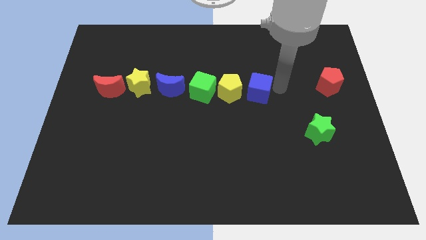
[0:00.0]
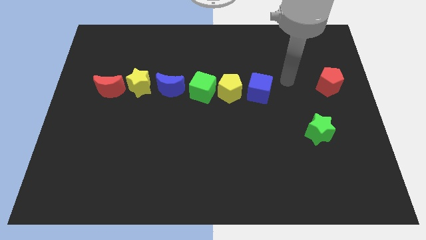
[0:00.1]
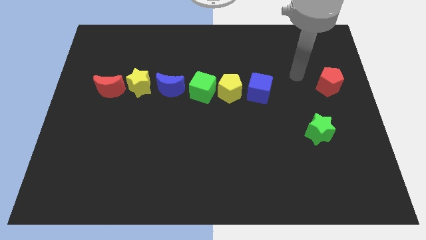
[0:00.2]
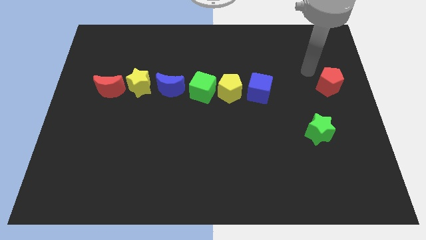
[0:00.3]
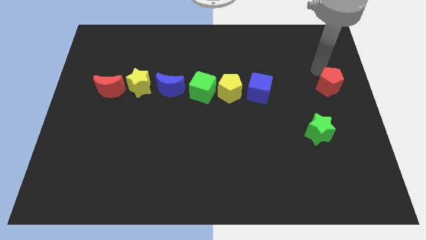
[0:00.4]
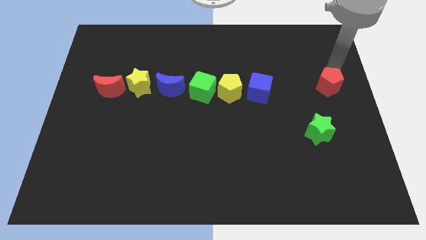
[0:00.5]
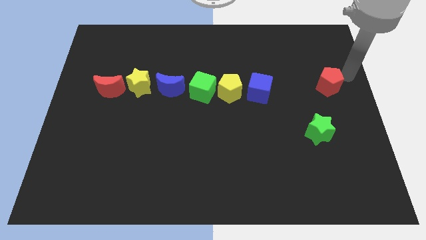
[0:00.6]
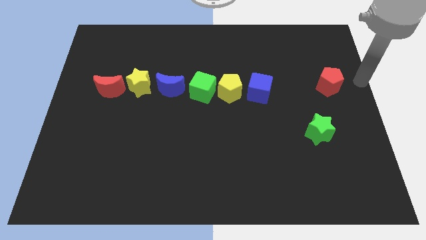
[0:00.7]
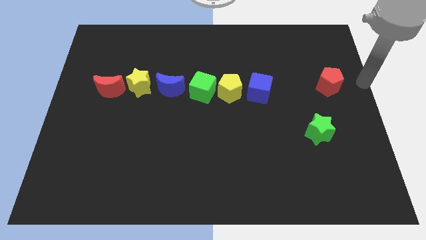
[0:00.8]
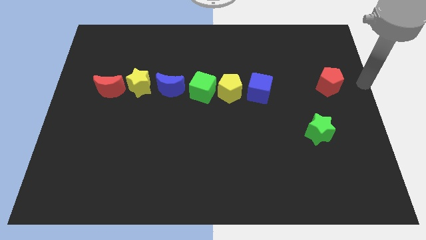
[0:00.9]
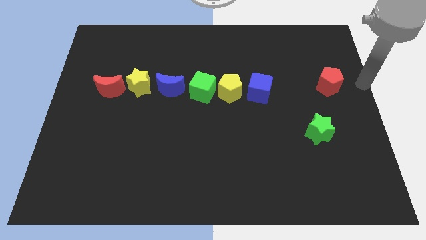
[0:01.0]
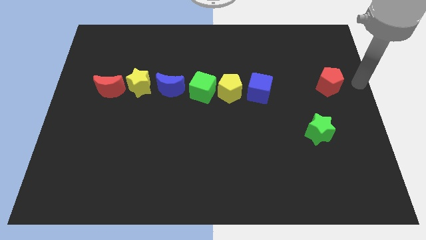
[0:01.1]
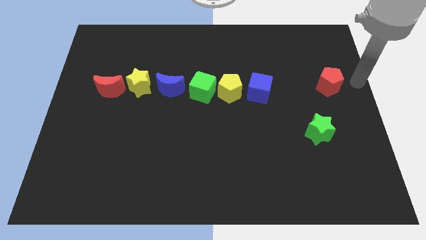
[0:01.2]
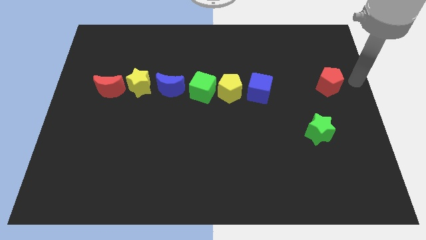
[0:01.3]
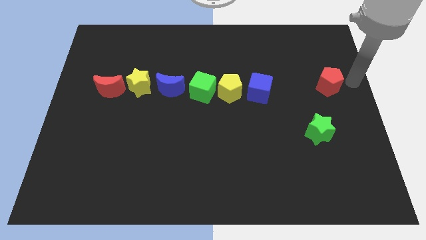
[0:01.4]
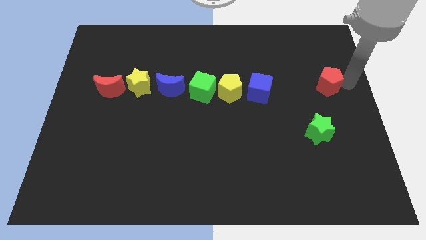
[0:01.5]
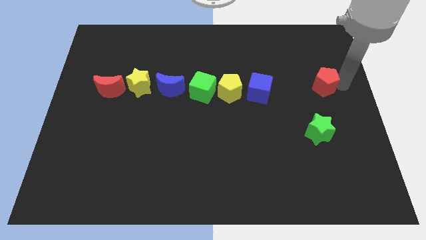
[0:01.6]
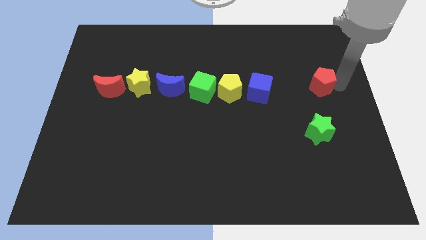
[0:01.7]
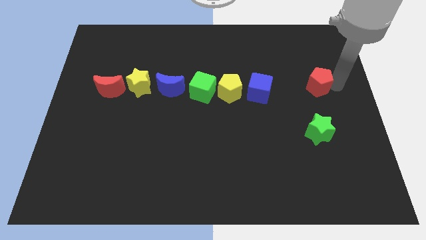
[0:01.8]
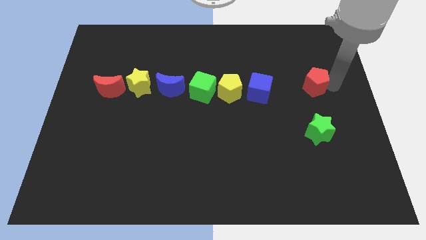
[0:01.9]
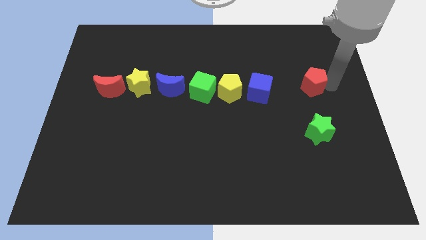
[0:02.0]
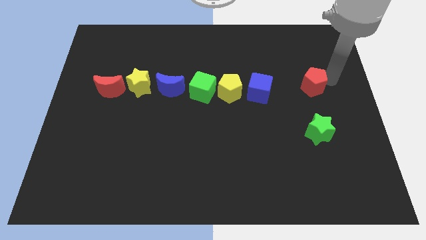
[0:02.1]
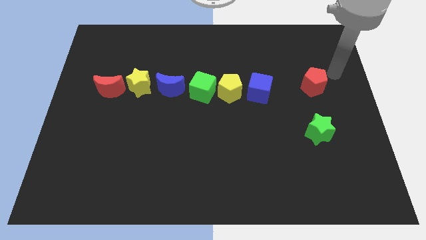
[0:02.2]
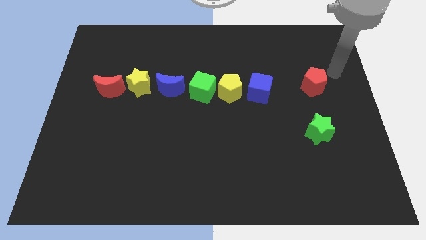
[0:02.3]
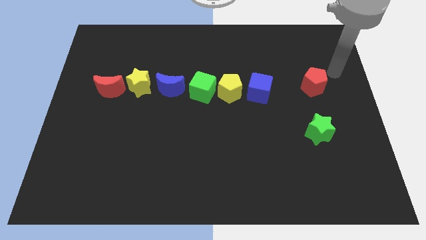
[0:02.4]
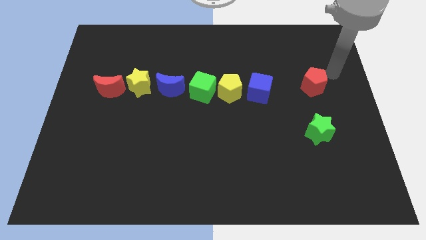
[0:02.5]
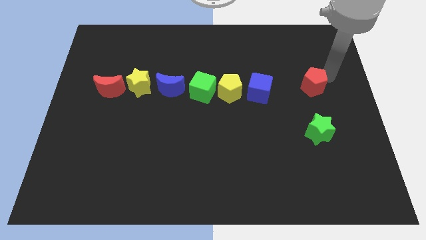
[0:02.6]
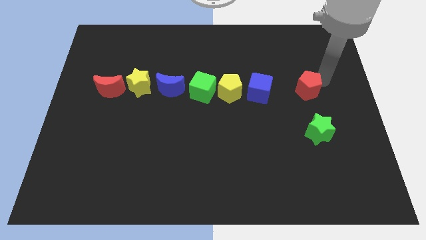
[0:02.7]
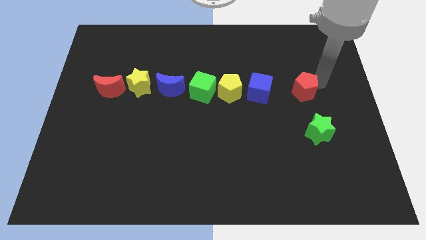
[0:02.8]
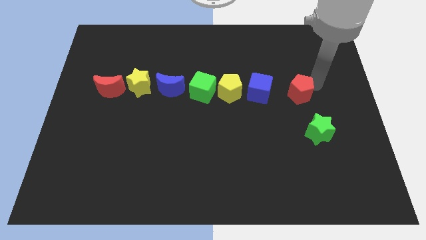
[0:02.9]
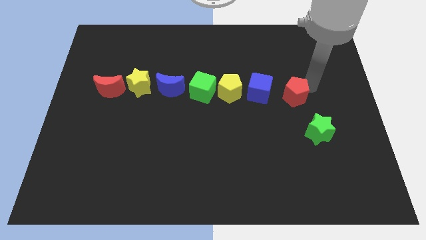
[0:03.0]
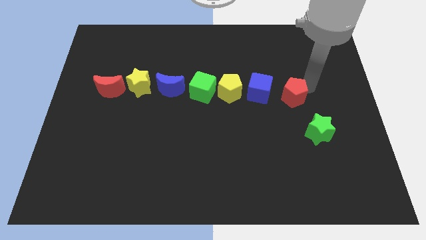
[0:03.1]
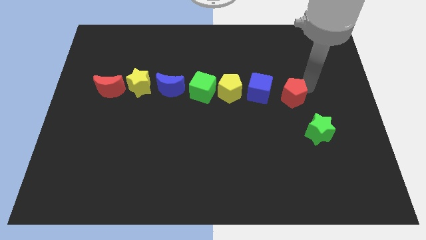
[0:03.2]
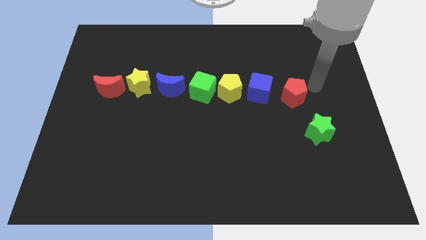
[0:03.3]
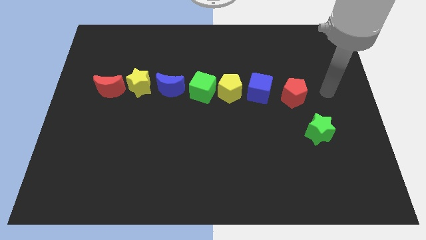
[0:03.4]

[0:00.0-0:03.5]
place red pentagon to the top left of green star

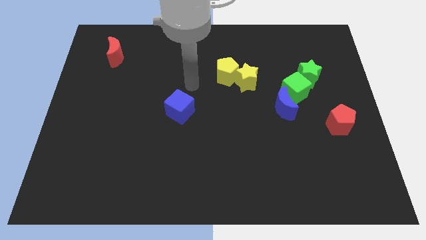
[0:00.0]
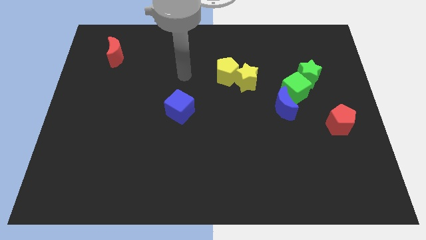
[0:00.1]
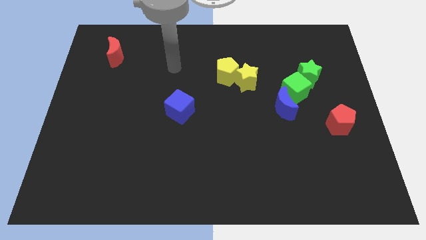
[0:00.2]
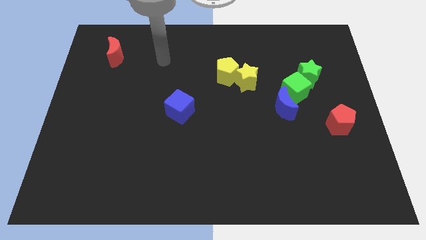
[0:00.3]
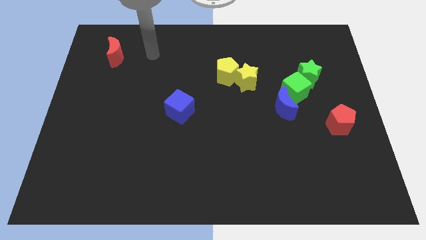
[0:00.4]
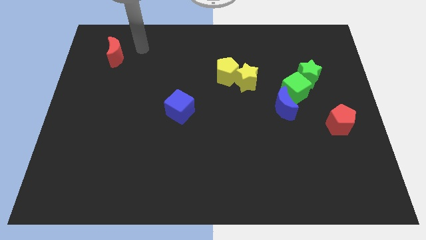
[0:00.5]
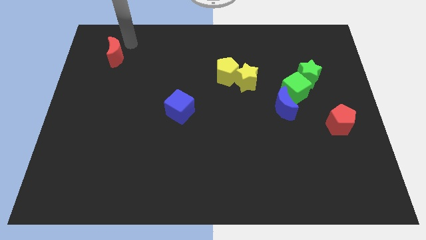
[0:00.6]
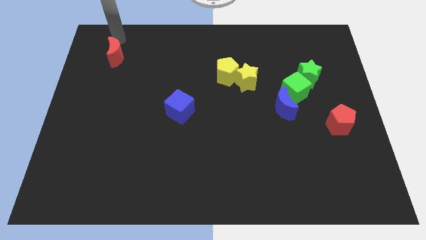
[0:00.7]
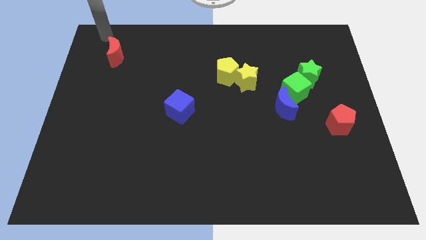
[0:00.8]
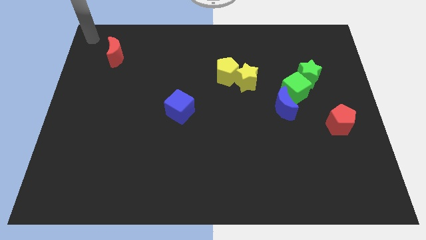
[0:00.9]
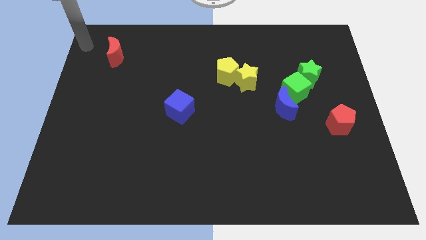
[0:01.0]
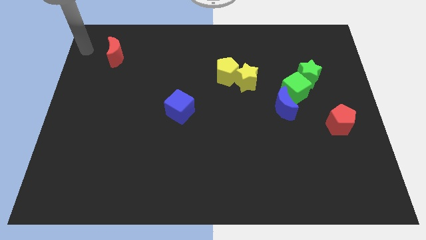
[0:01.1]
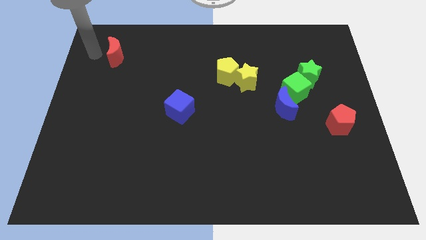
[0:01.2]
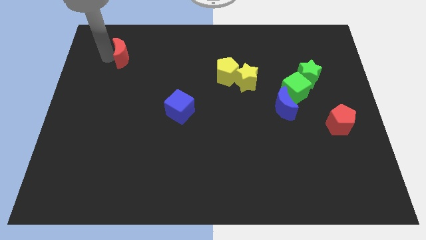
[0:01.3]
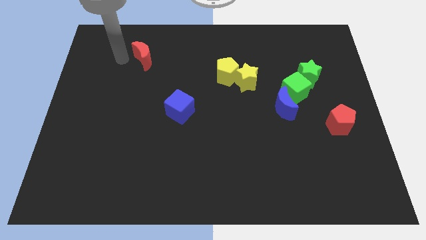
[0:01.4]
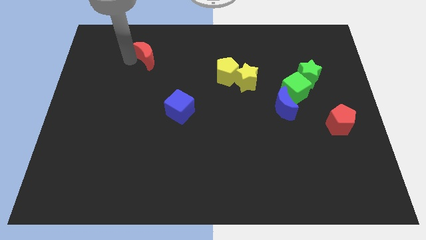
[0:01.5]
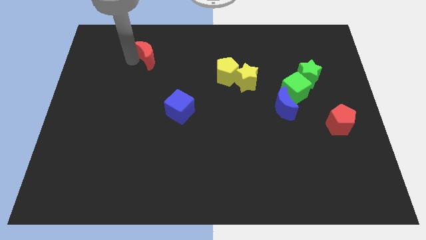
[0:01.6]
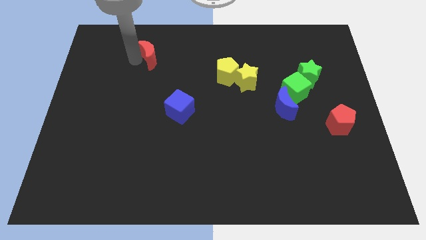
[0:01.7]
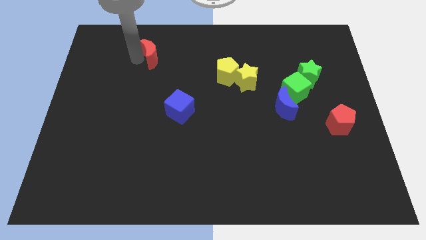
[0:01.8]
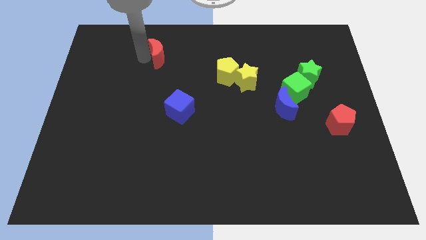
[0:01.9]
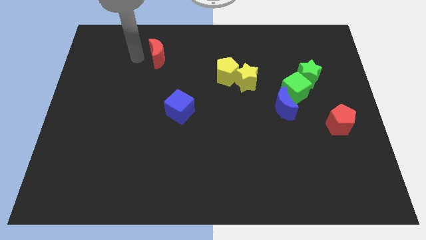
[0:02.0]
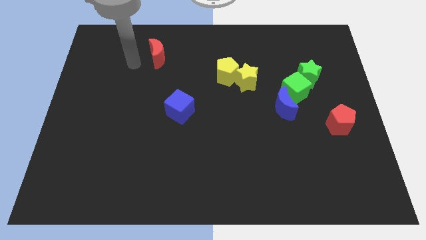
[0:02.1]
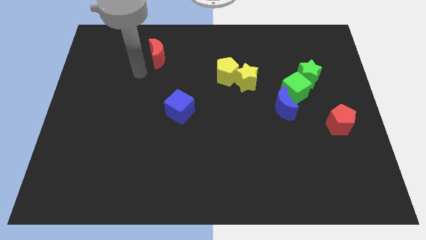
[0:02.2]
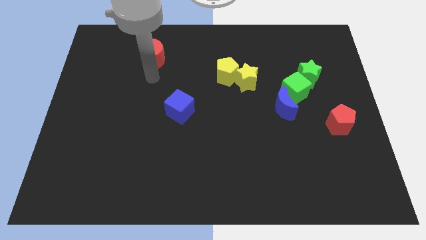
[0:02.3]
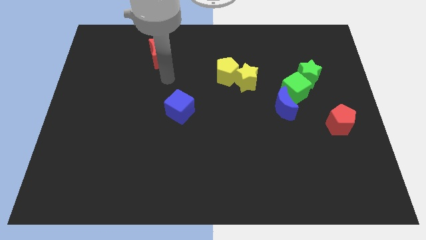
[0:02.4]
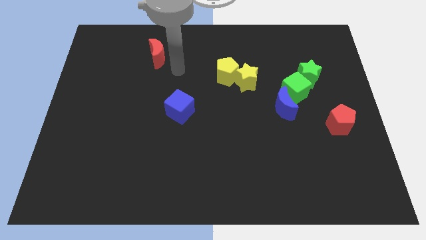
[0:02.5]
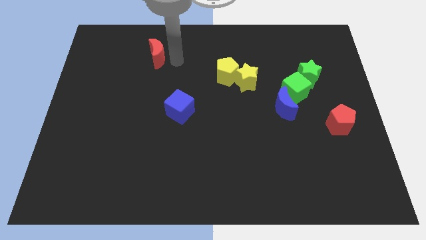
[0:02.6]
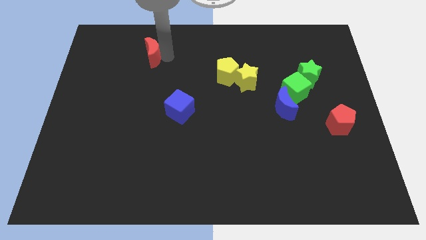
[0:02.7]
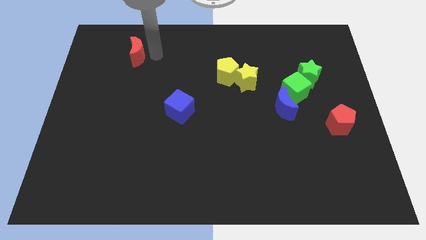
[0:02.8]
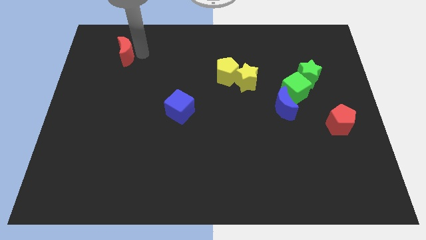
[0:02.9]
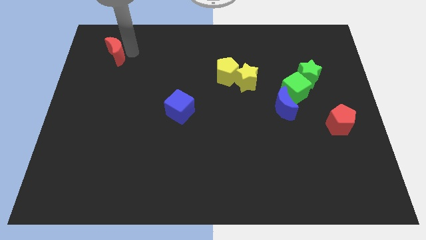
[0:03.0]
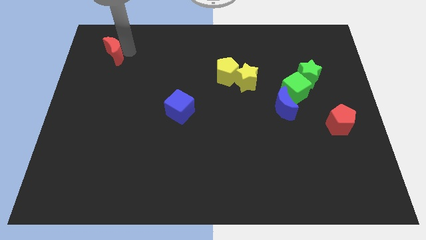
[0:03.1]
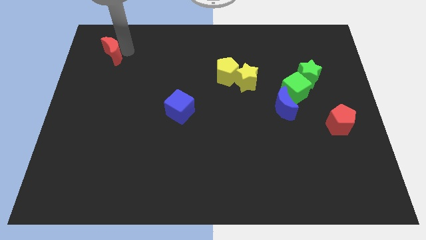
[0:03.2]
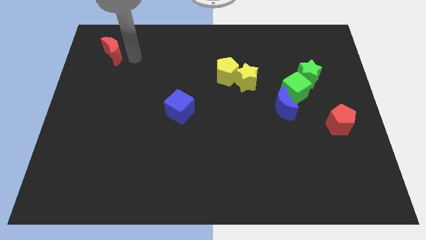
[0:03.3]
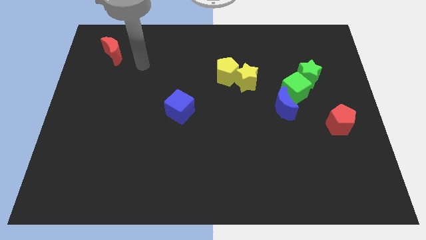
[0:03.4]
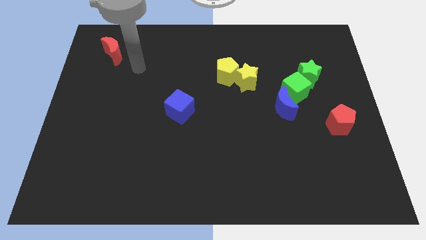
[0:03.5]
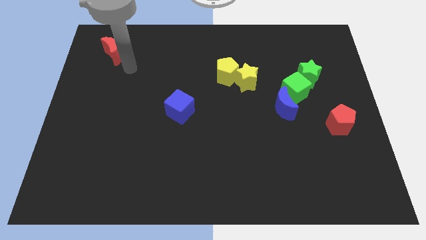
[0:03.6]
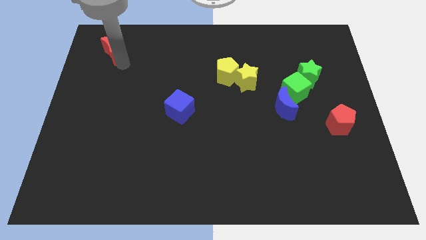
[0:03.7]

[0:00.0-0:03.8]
place the red moon towards top left side

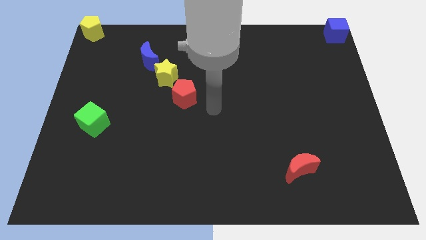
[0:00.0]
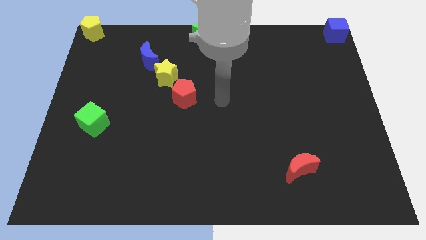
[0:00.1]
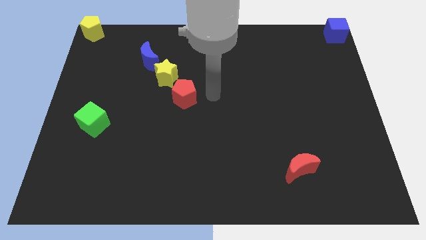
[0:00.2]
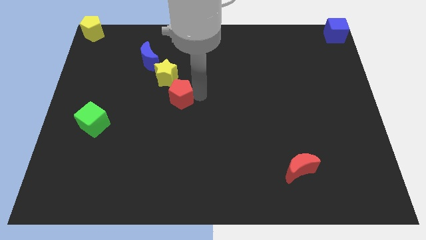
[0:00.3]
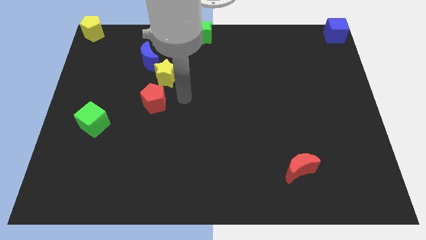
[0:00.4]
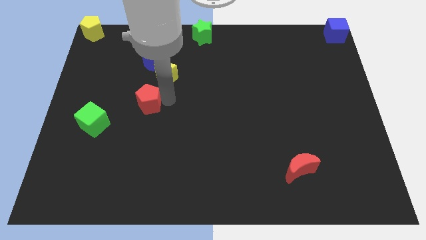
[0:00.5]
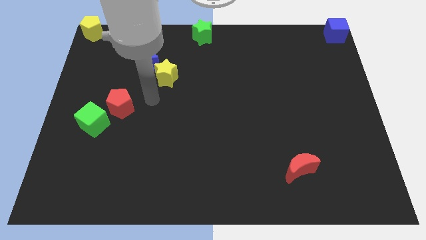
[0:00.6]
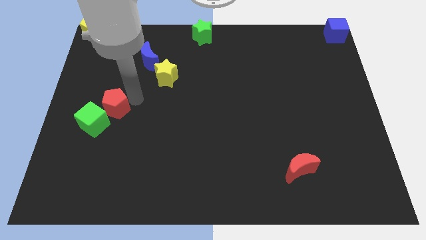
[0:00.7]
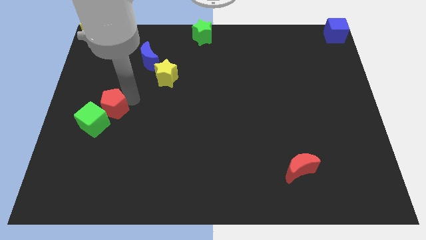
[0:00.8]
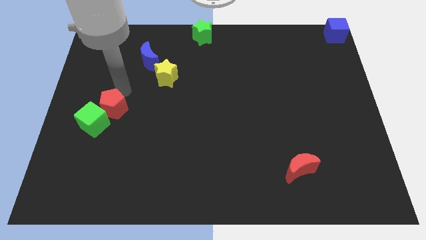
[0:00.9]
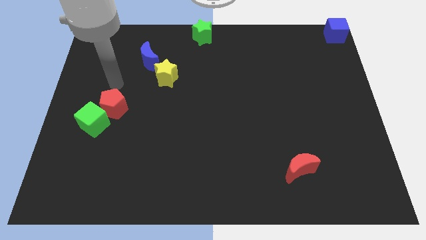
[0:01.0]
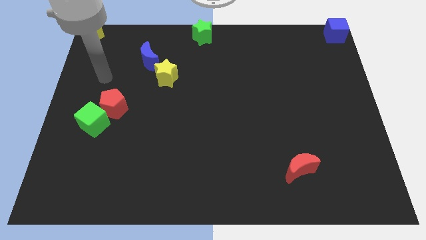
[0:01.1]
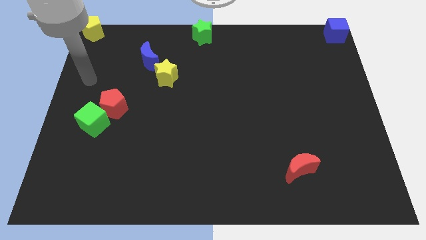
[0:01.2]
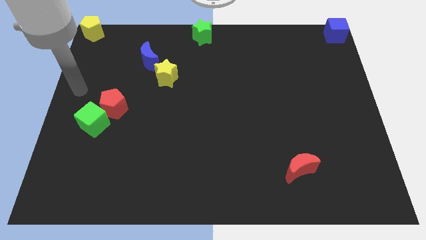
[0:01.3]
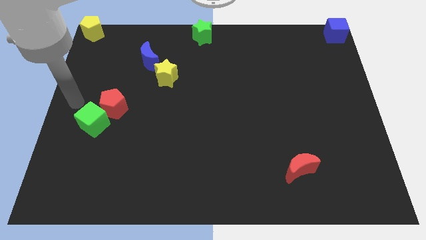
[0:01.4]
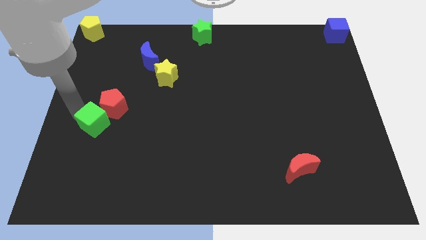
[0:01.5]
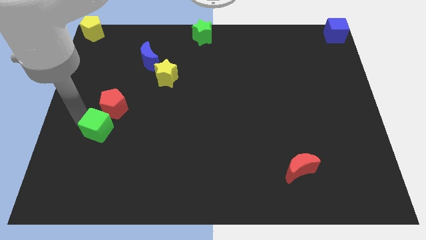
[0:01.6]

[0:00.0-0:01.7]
place red pentagon above green cube in diagonal position
